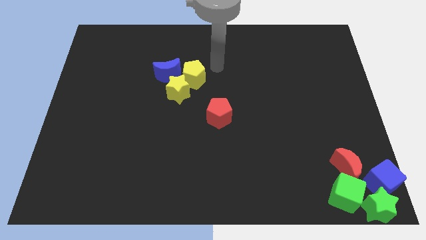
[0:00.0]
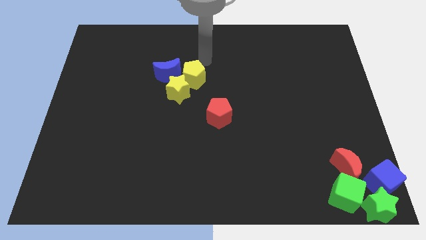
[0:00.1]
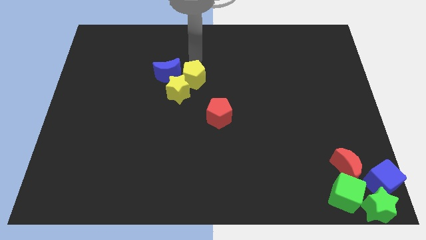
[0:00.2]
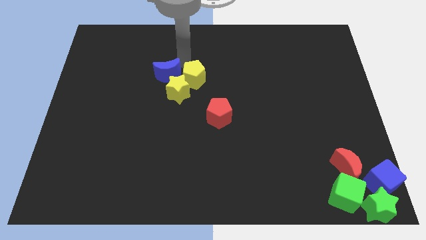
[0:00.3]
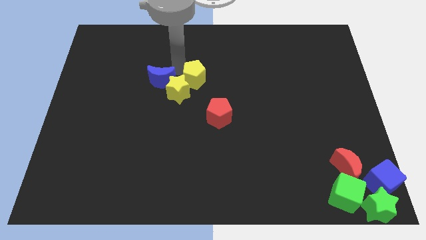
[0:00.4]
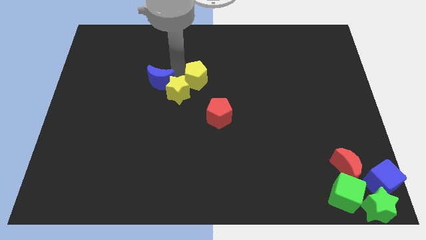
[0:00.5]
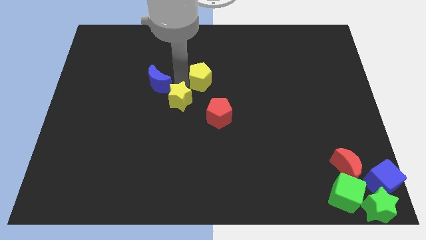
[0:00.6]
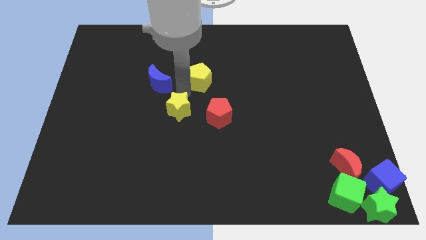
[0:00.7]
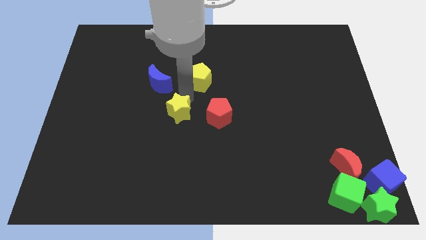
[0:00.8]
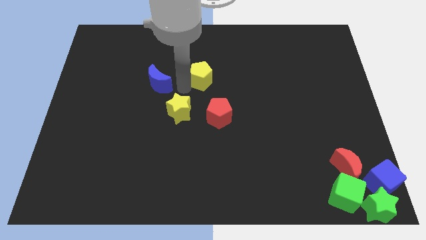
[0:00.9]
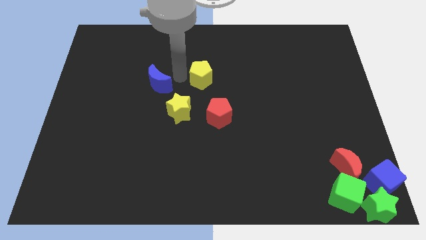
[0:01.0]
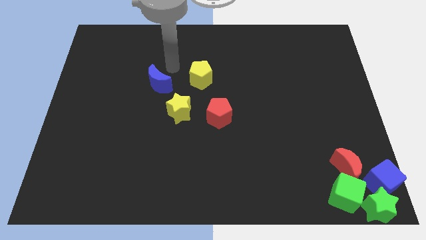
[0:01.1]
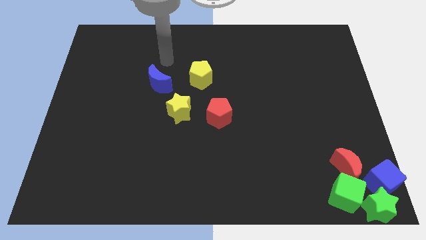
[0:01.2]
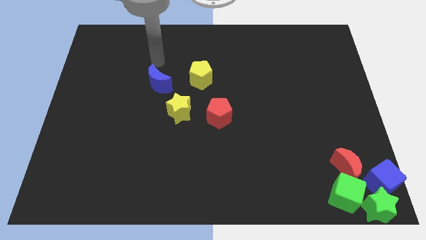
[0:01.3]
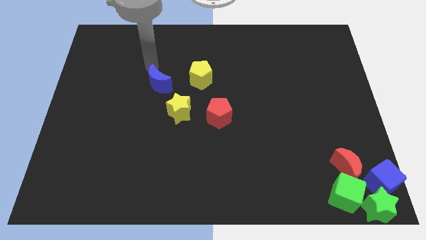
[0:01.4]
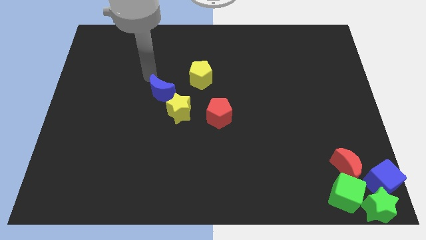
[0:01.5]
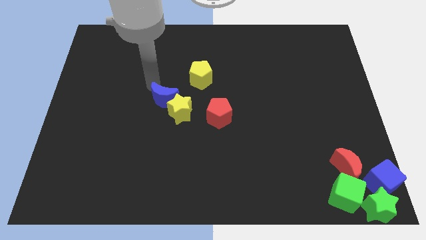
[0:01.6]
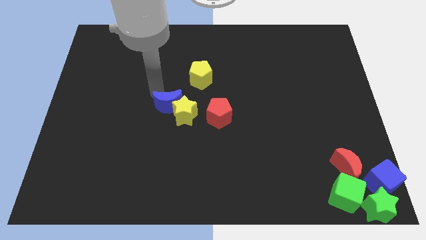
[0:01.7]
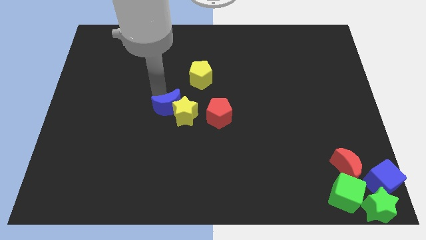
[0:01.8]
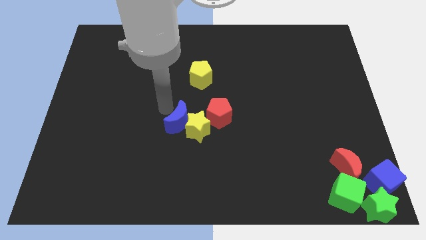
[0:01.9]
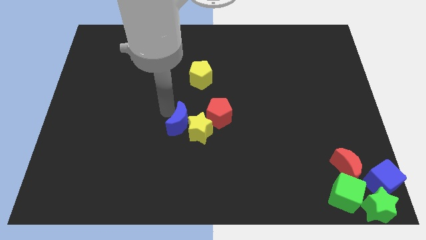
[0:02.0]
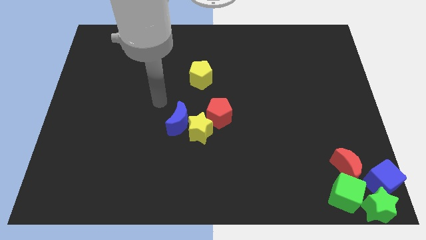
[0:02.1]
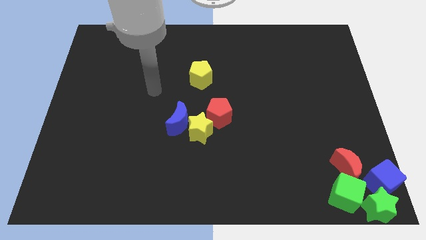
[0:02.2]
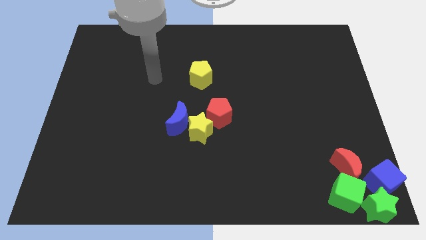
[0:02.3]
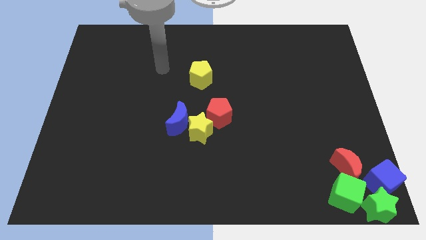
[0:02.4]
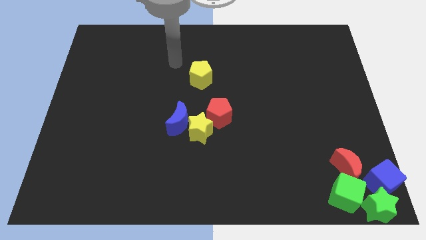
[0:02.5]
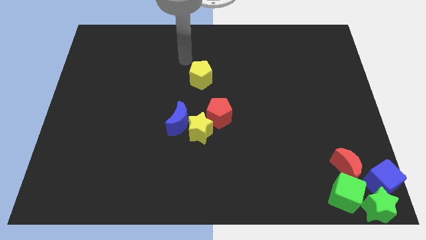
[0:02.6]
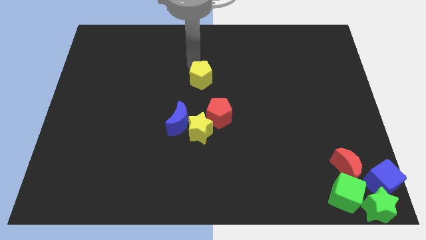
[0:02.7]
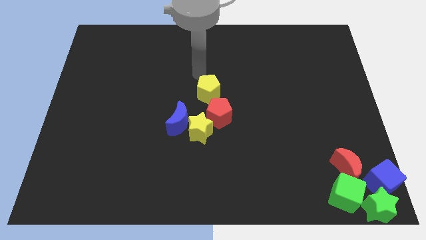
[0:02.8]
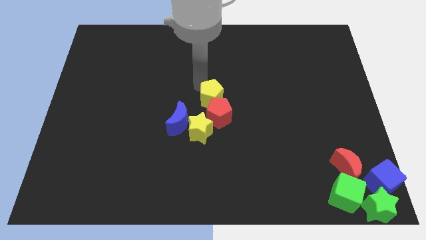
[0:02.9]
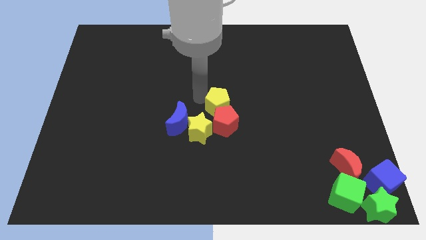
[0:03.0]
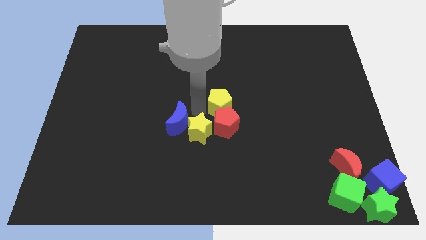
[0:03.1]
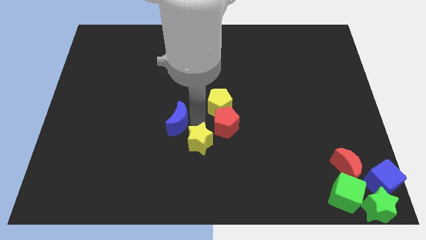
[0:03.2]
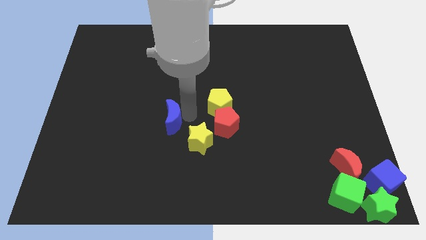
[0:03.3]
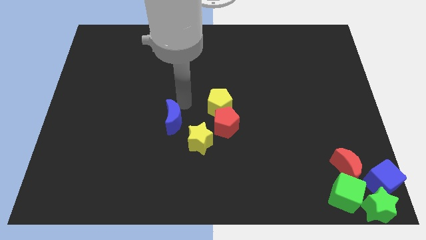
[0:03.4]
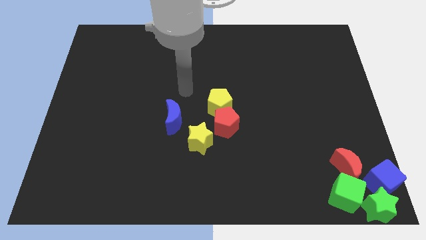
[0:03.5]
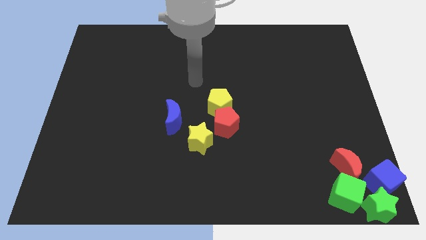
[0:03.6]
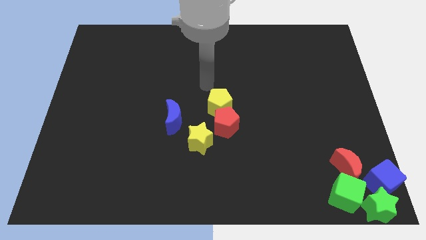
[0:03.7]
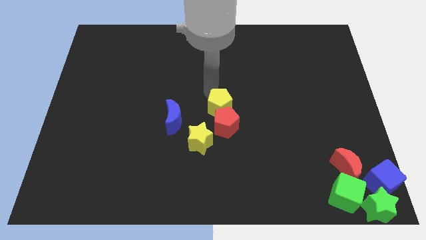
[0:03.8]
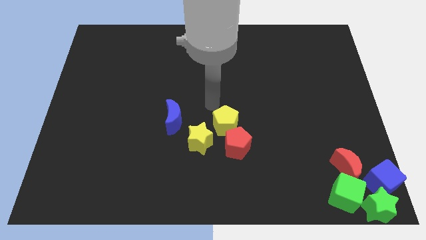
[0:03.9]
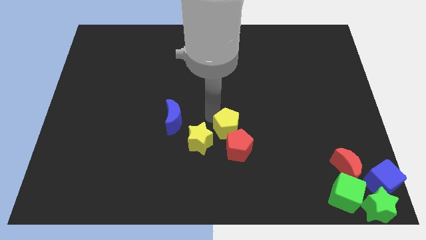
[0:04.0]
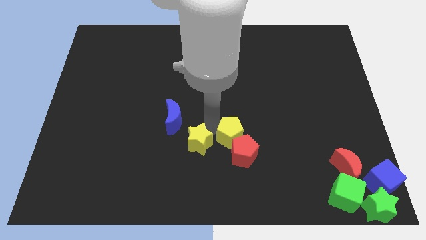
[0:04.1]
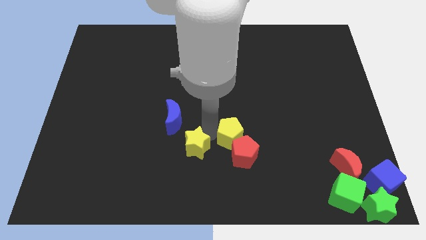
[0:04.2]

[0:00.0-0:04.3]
move the group of blocks to the bottom of the board

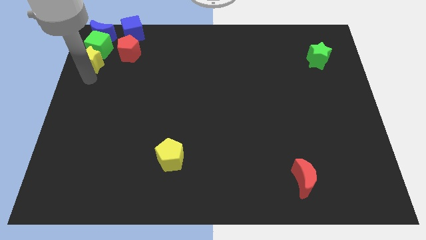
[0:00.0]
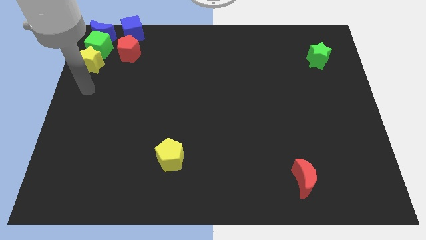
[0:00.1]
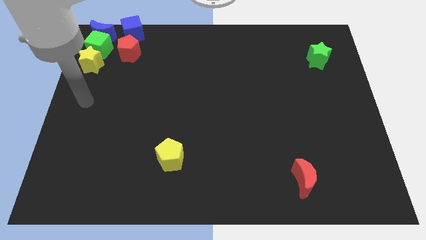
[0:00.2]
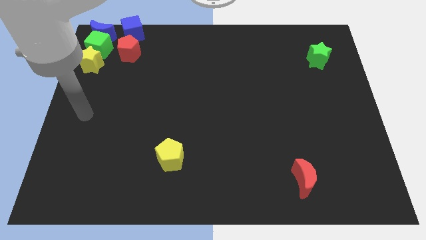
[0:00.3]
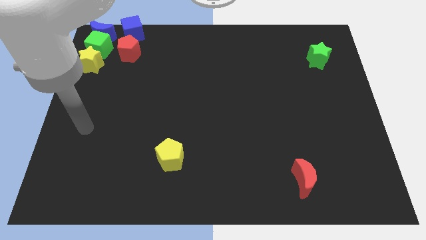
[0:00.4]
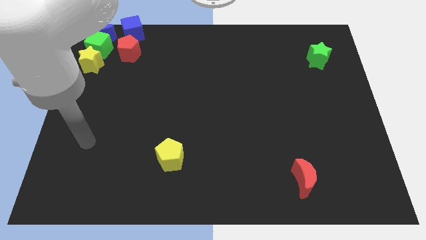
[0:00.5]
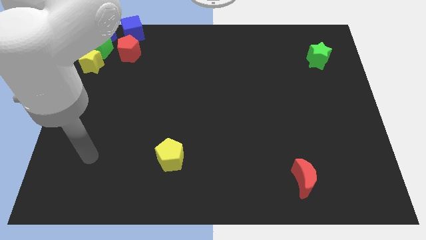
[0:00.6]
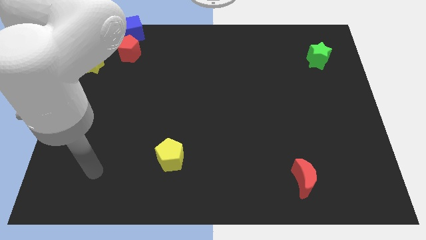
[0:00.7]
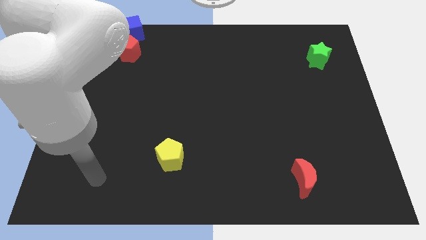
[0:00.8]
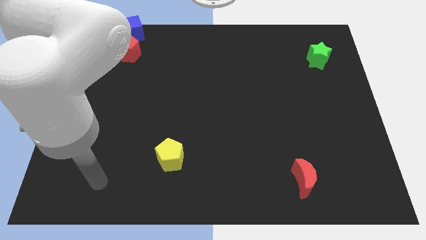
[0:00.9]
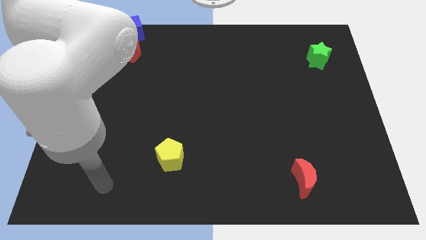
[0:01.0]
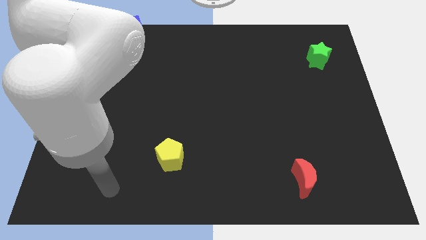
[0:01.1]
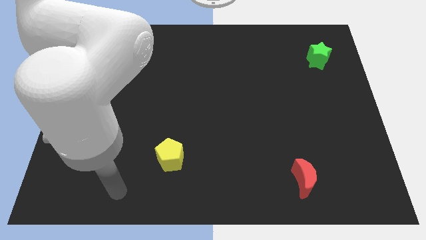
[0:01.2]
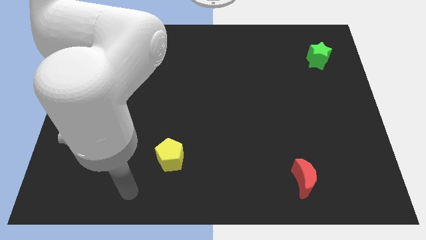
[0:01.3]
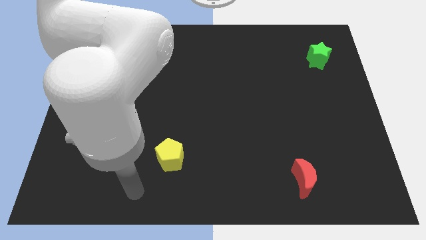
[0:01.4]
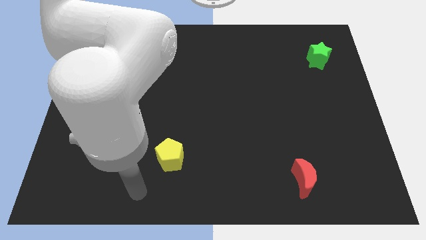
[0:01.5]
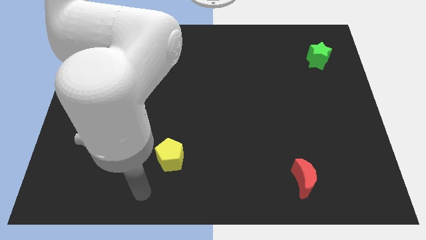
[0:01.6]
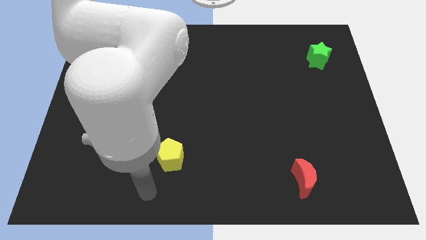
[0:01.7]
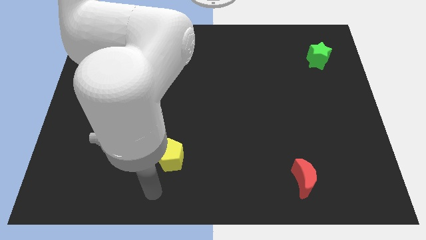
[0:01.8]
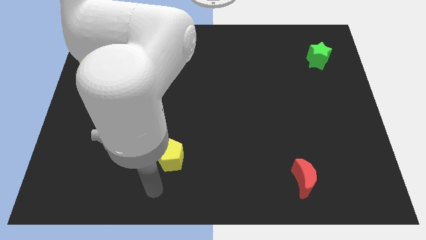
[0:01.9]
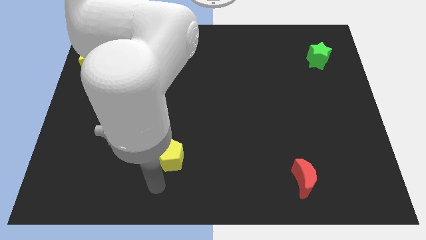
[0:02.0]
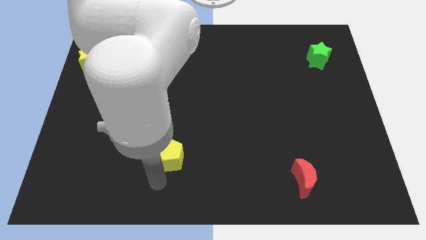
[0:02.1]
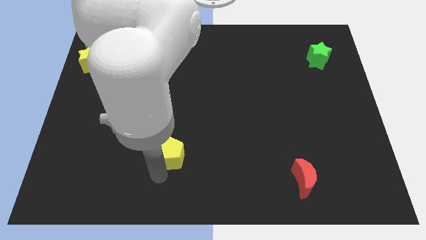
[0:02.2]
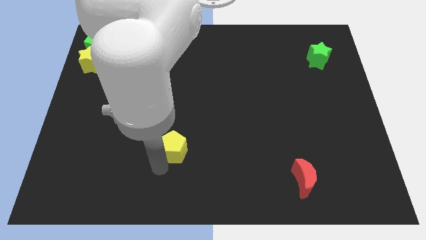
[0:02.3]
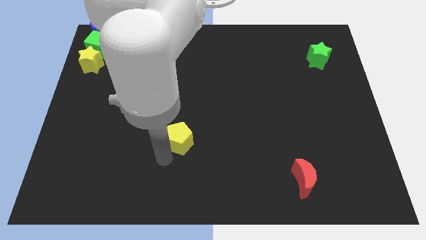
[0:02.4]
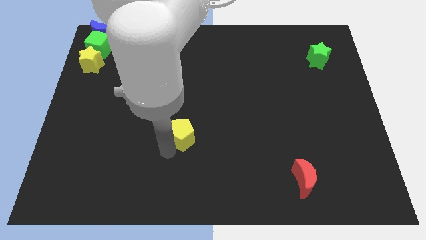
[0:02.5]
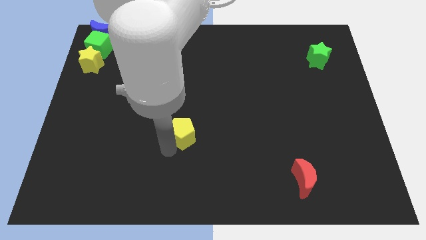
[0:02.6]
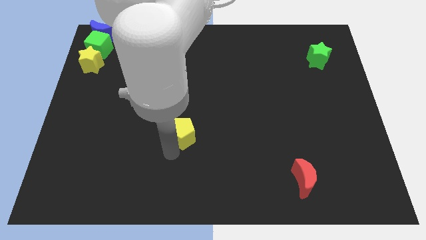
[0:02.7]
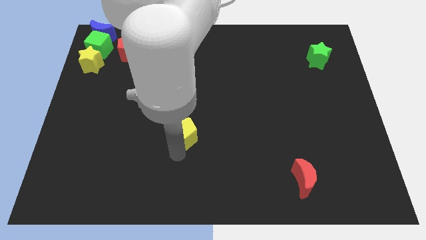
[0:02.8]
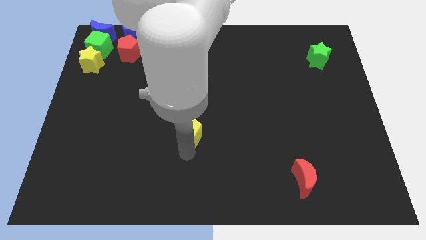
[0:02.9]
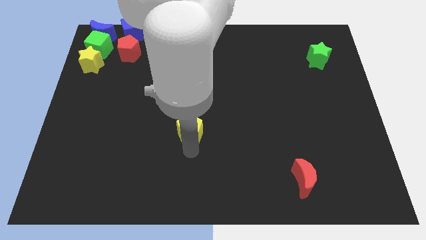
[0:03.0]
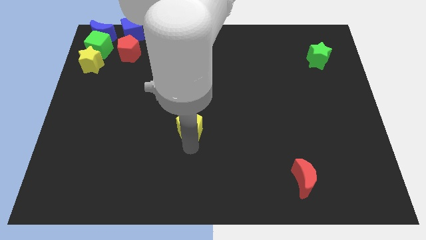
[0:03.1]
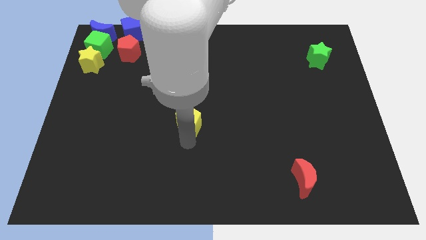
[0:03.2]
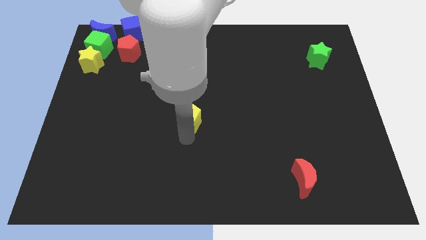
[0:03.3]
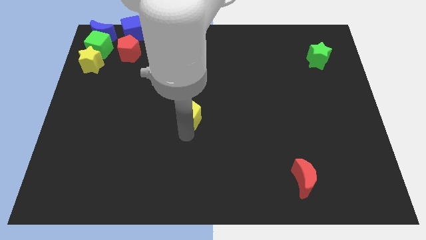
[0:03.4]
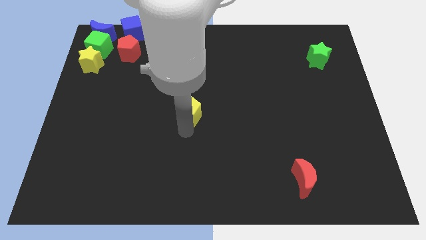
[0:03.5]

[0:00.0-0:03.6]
place yellow pentagon to the center of the board

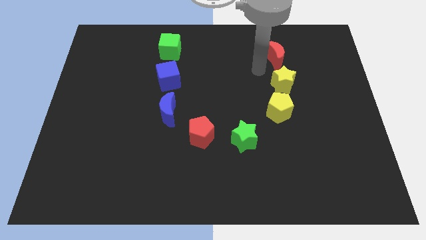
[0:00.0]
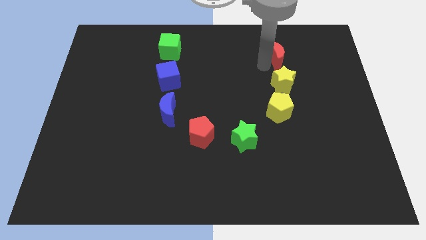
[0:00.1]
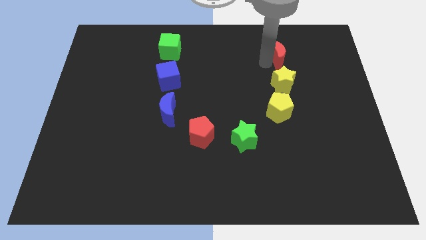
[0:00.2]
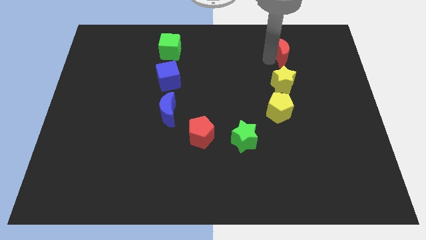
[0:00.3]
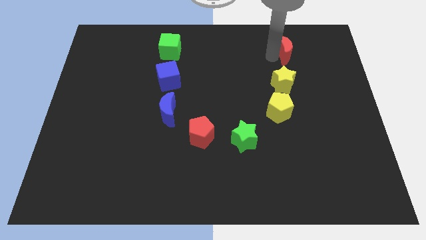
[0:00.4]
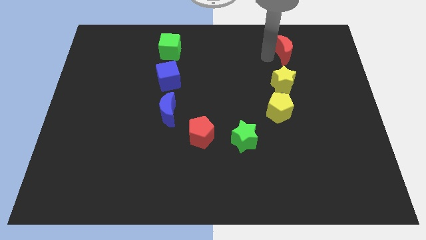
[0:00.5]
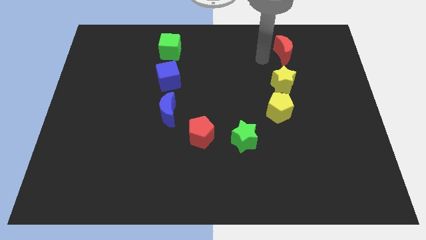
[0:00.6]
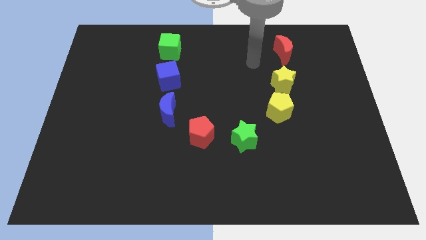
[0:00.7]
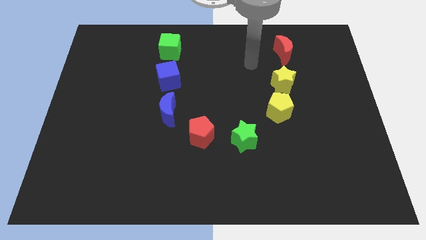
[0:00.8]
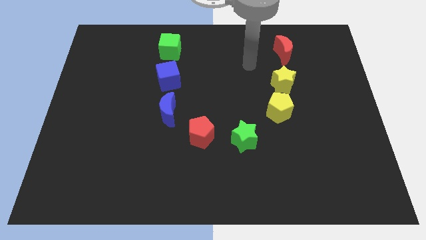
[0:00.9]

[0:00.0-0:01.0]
move the red crescent above the yellow star
